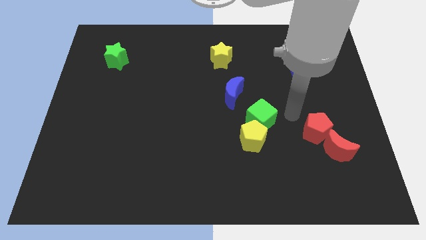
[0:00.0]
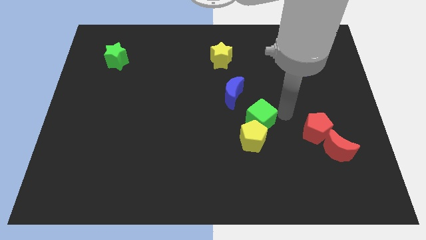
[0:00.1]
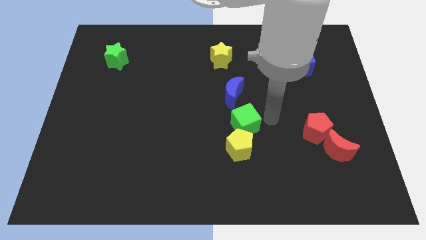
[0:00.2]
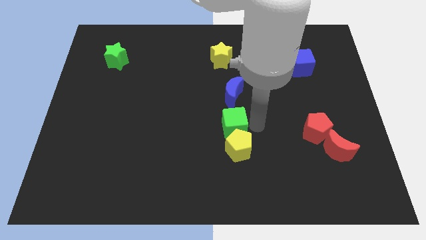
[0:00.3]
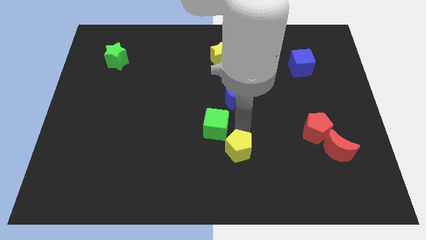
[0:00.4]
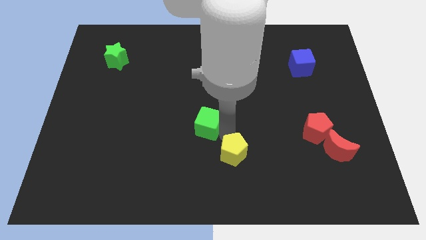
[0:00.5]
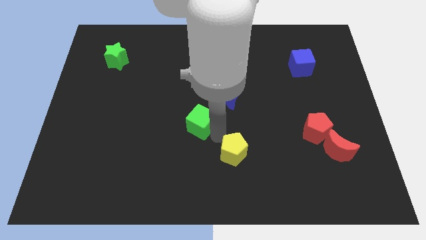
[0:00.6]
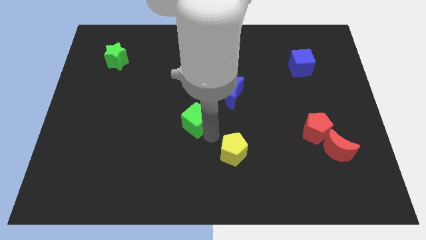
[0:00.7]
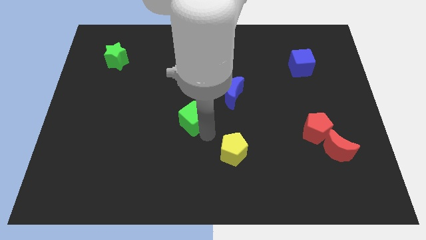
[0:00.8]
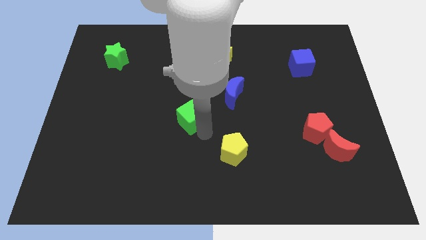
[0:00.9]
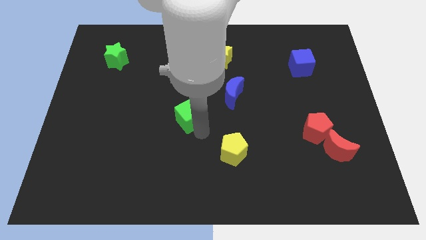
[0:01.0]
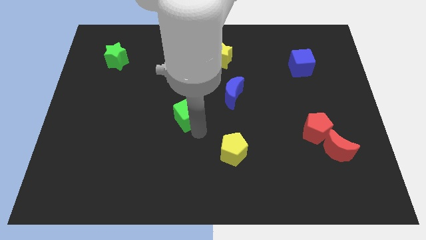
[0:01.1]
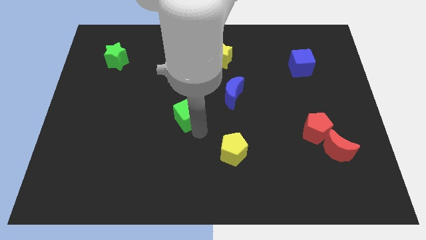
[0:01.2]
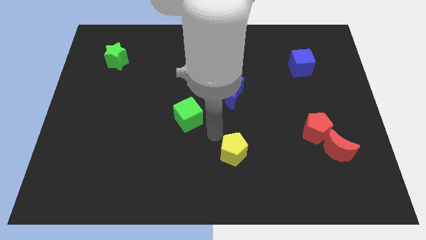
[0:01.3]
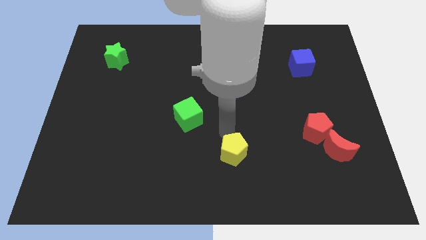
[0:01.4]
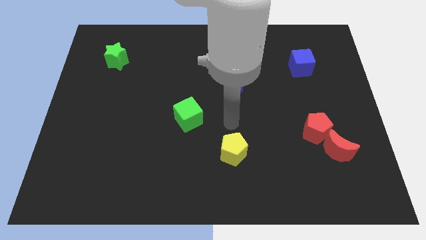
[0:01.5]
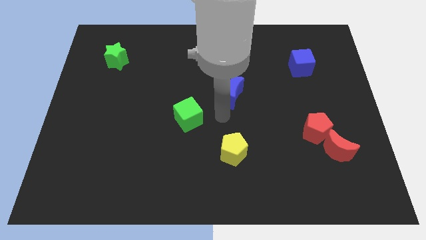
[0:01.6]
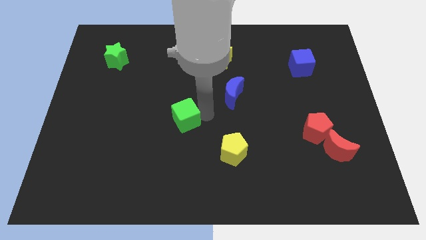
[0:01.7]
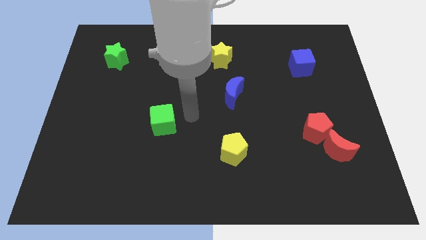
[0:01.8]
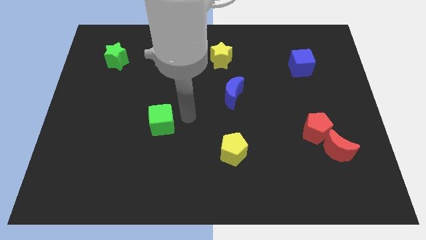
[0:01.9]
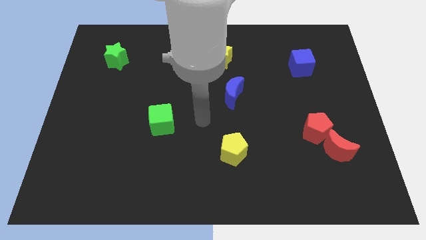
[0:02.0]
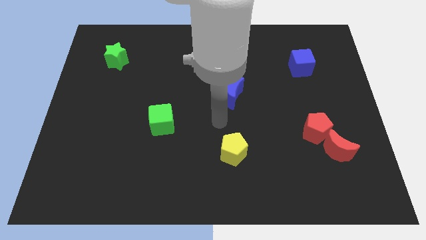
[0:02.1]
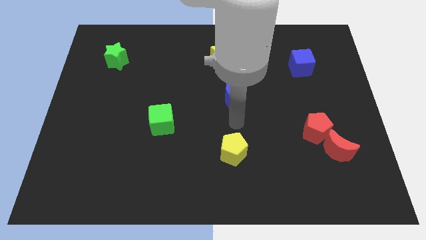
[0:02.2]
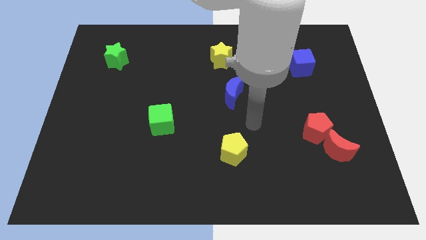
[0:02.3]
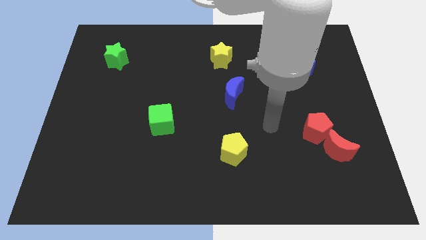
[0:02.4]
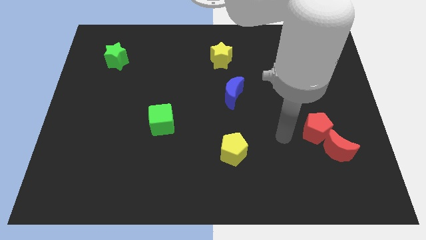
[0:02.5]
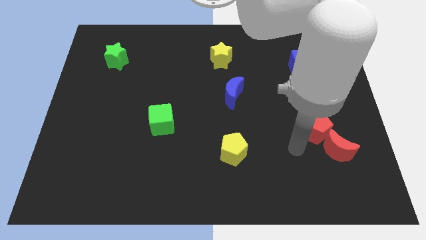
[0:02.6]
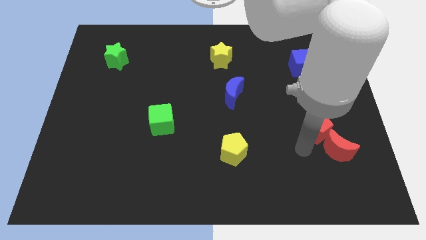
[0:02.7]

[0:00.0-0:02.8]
push the green cube towards the center left

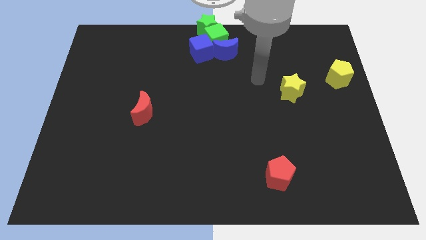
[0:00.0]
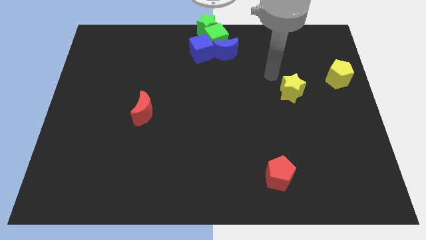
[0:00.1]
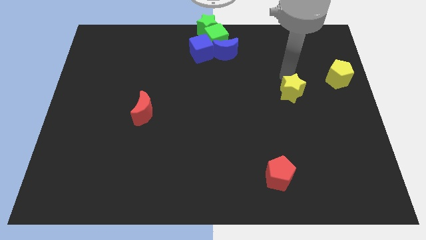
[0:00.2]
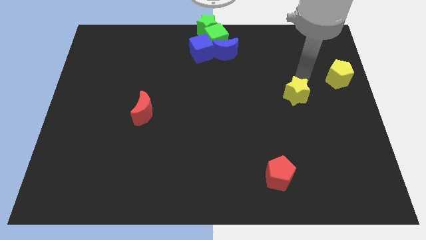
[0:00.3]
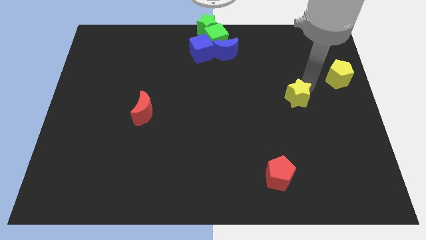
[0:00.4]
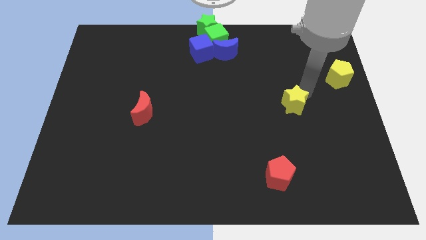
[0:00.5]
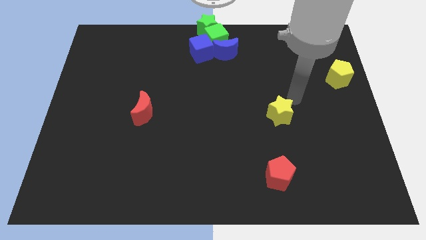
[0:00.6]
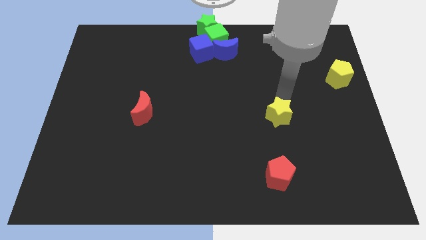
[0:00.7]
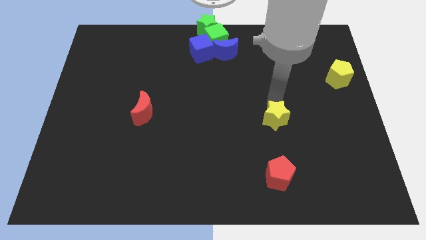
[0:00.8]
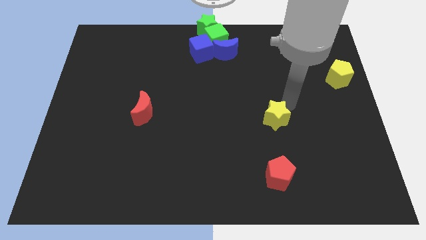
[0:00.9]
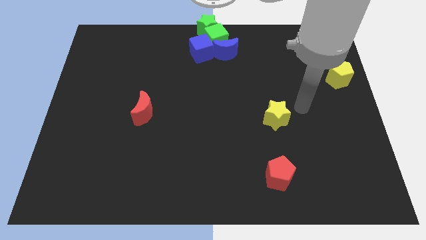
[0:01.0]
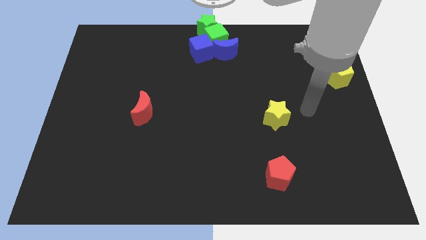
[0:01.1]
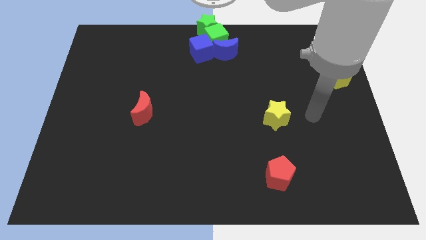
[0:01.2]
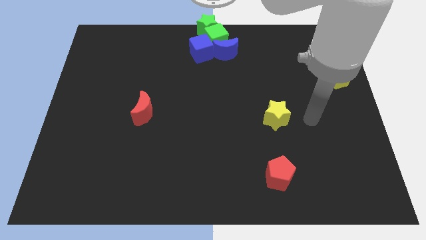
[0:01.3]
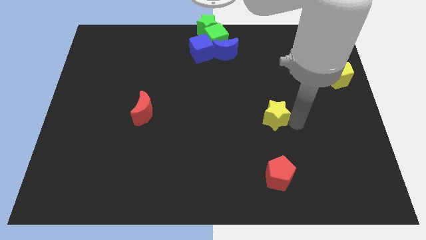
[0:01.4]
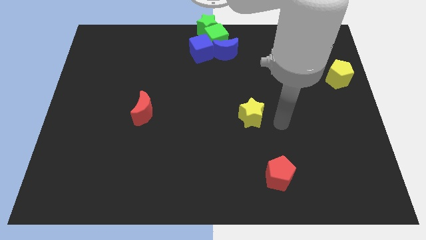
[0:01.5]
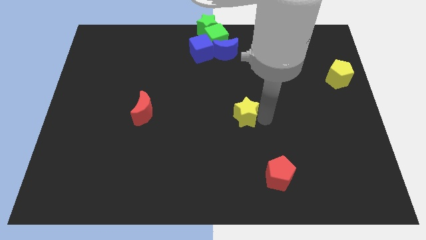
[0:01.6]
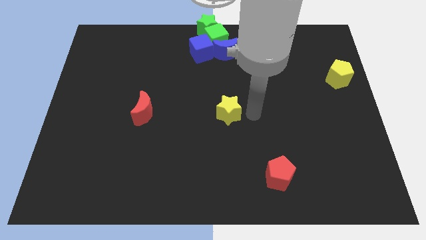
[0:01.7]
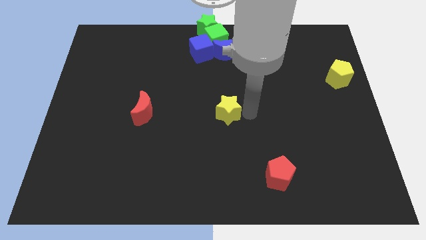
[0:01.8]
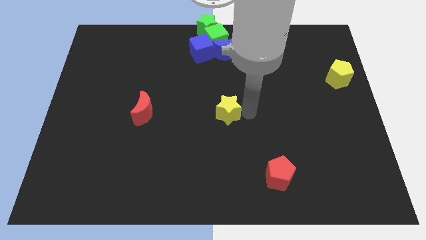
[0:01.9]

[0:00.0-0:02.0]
push the yellow star at the center of the board

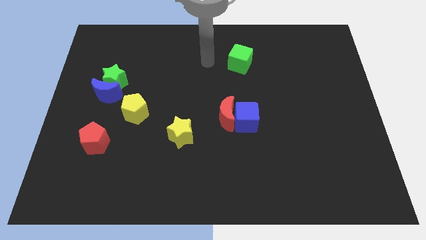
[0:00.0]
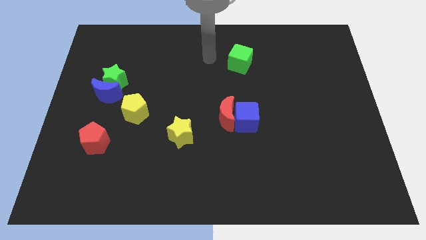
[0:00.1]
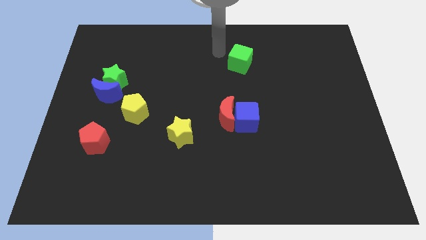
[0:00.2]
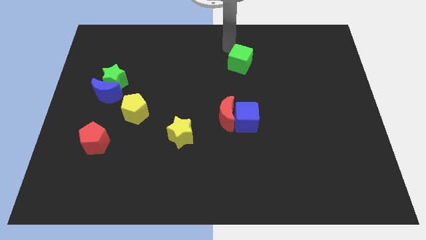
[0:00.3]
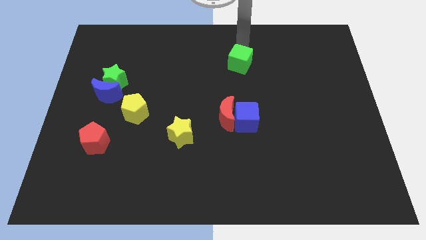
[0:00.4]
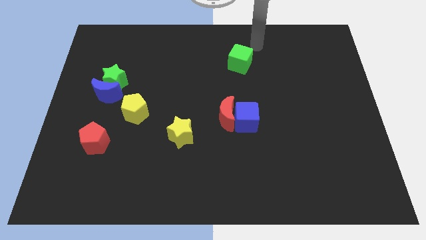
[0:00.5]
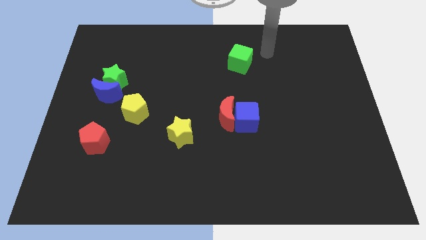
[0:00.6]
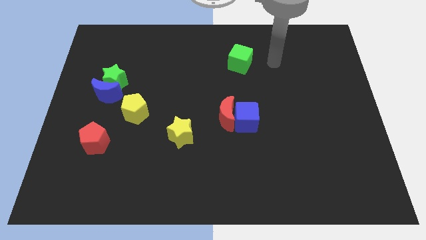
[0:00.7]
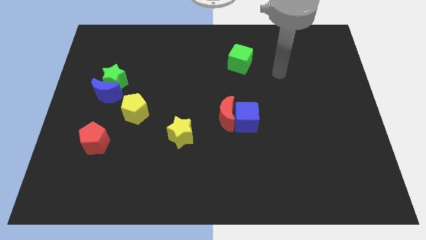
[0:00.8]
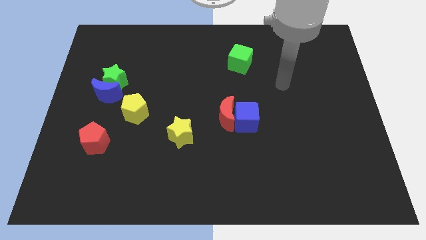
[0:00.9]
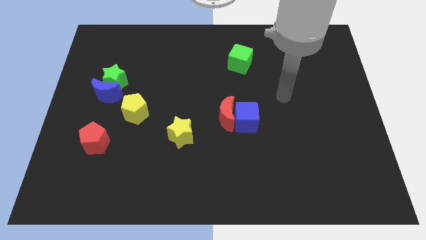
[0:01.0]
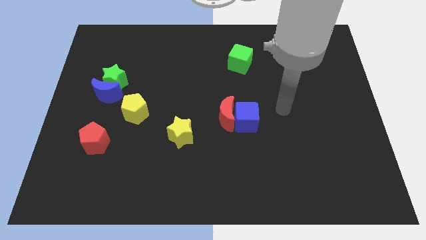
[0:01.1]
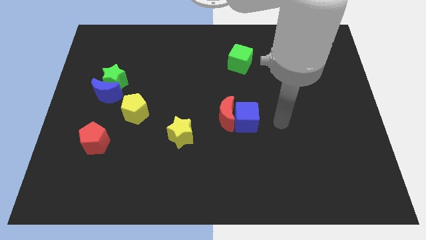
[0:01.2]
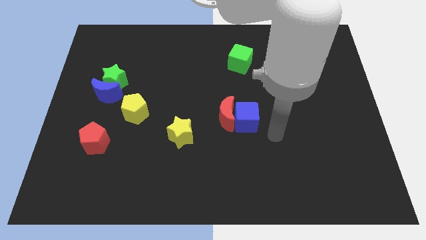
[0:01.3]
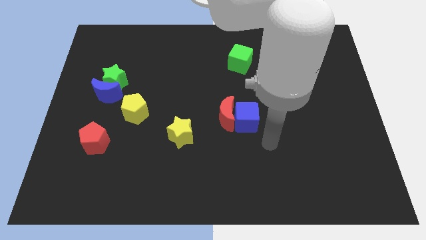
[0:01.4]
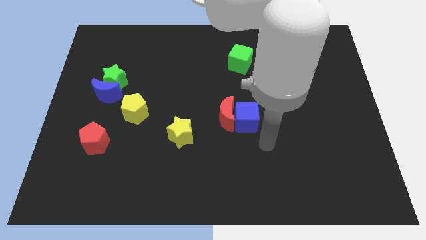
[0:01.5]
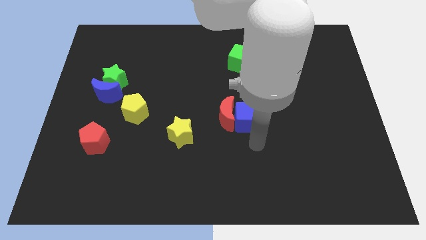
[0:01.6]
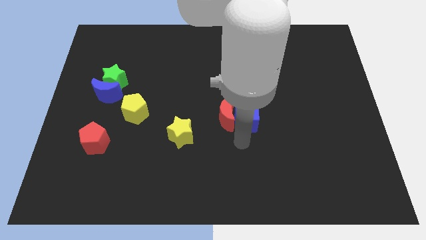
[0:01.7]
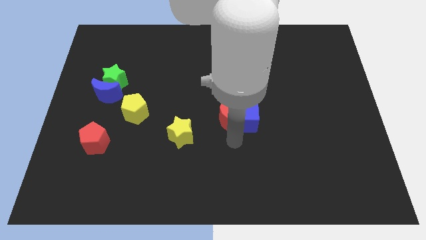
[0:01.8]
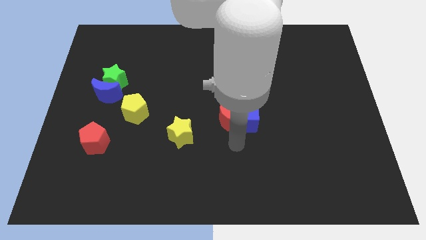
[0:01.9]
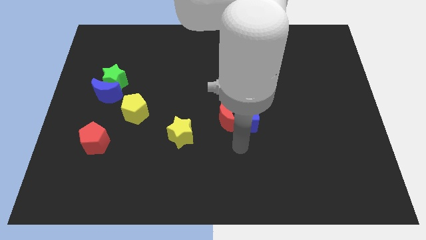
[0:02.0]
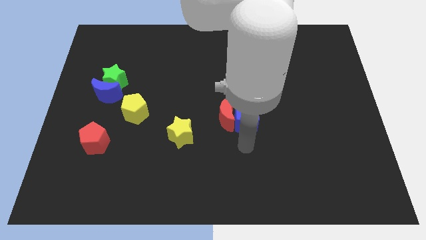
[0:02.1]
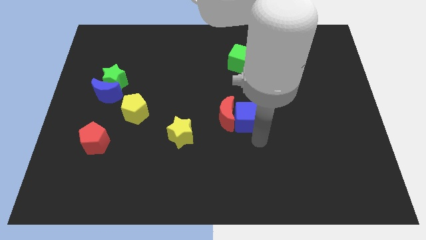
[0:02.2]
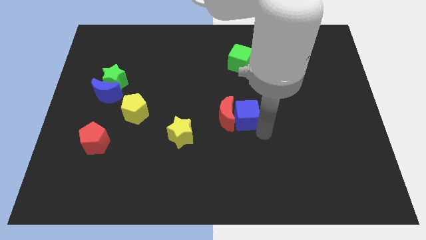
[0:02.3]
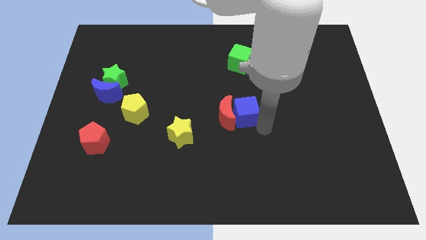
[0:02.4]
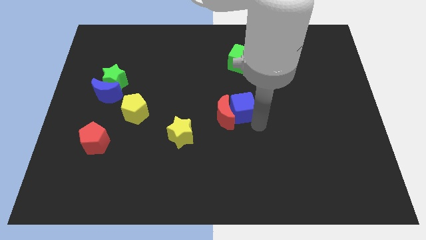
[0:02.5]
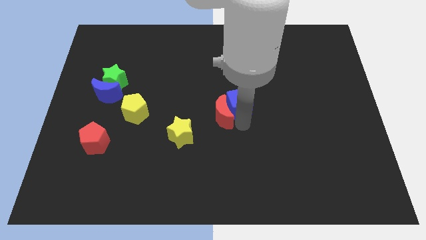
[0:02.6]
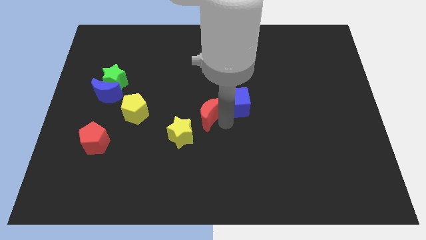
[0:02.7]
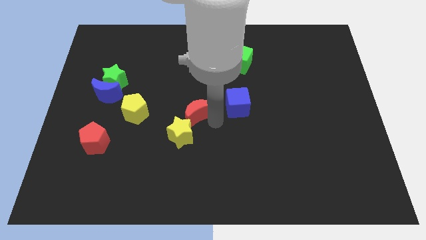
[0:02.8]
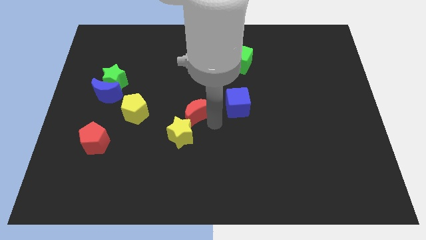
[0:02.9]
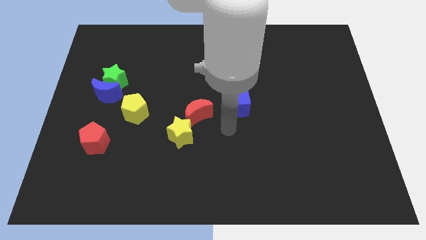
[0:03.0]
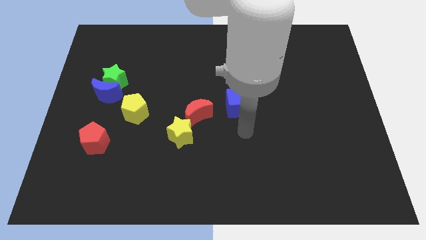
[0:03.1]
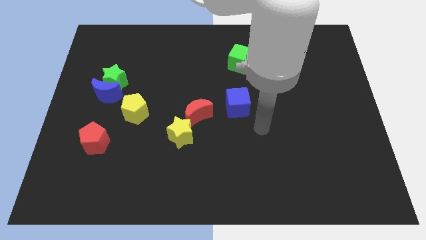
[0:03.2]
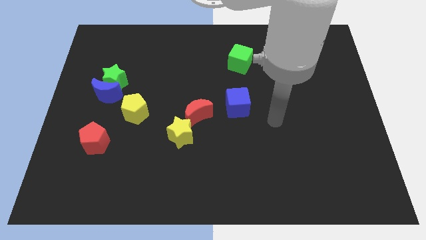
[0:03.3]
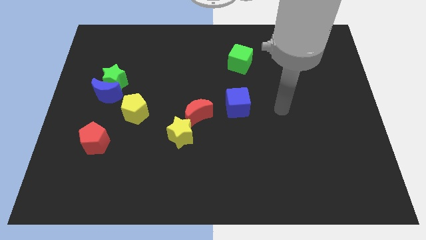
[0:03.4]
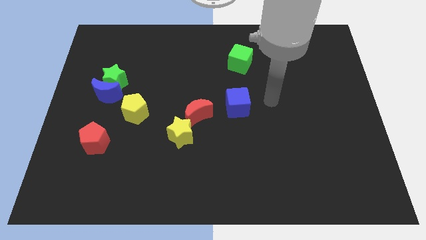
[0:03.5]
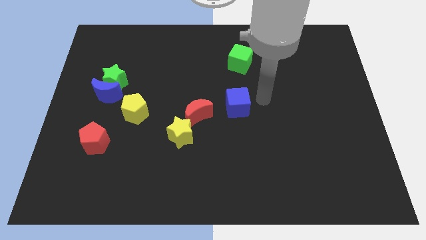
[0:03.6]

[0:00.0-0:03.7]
separate the blue and red crescent

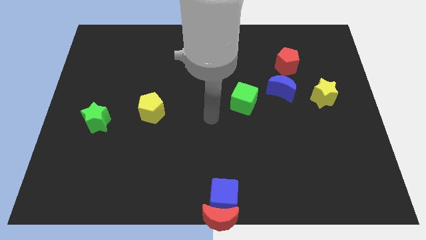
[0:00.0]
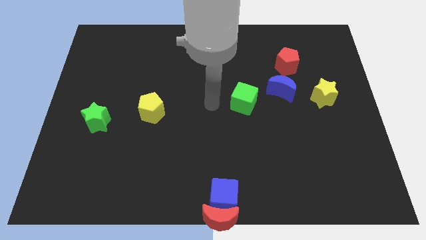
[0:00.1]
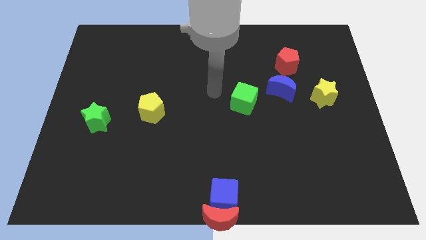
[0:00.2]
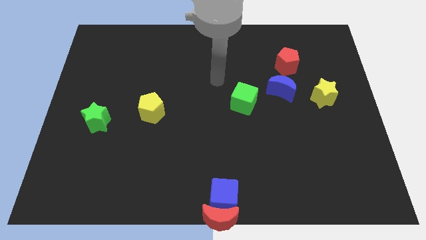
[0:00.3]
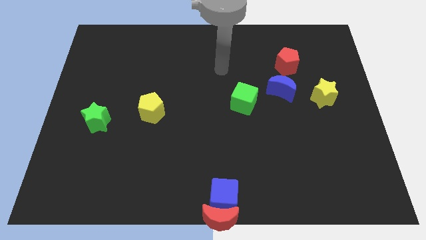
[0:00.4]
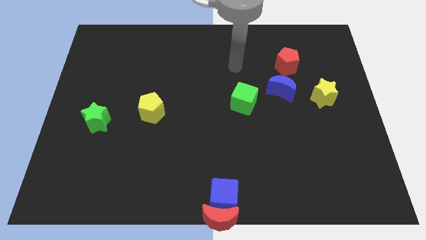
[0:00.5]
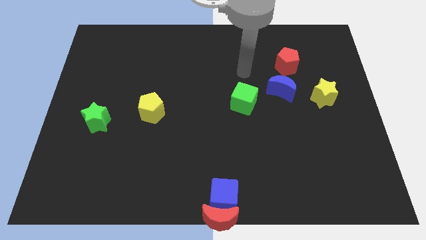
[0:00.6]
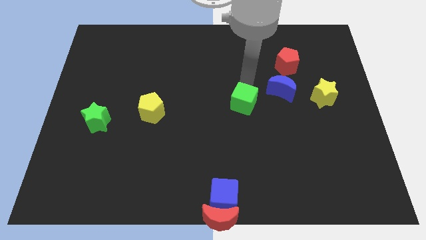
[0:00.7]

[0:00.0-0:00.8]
move the arm left to the blue crescent
